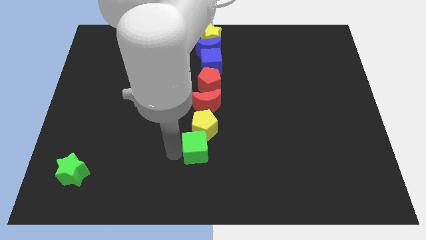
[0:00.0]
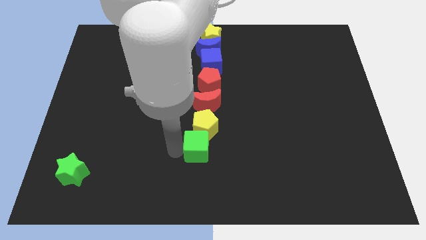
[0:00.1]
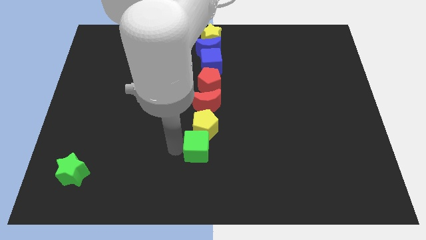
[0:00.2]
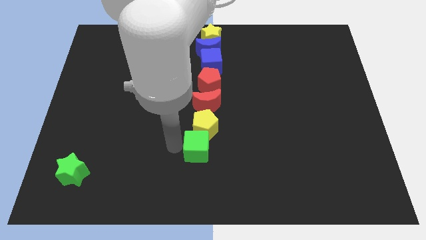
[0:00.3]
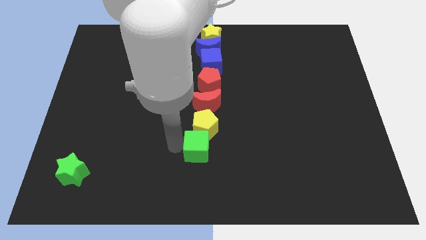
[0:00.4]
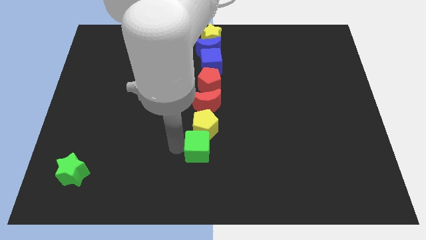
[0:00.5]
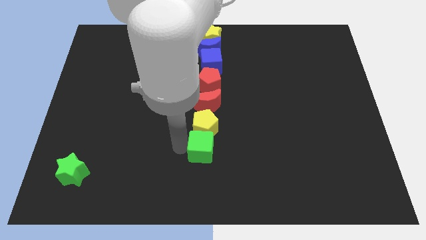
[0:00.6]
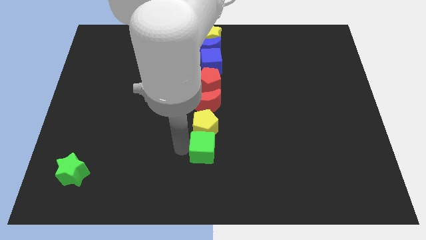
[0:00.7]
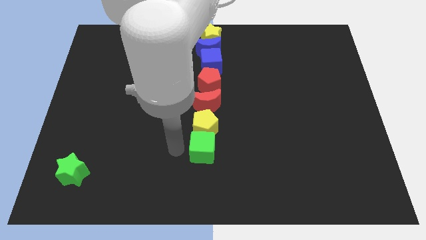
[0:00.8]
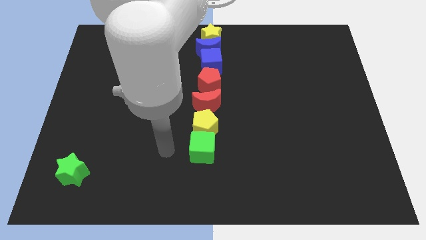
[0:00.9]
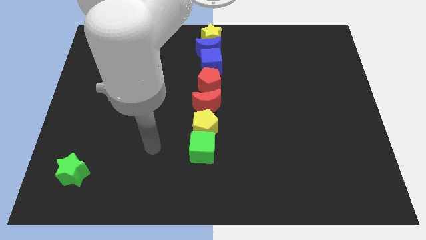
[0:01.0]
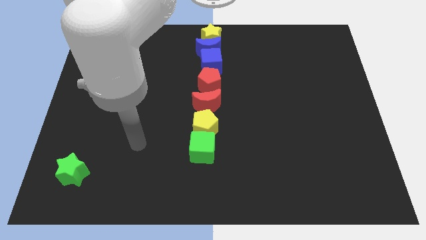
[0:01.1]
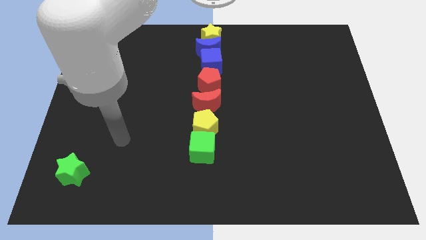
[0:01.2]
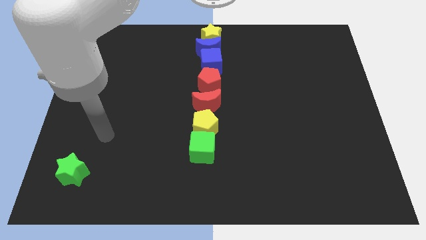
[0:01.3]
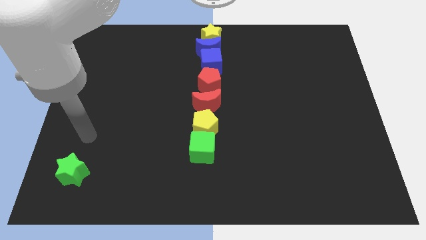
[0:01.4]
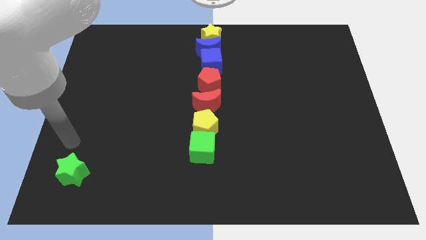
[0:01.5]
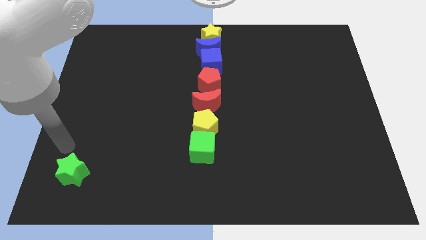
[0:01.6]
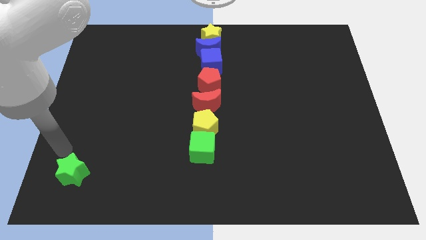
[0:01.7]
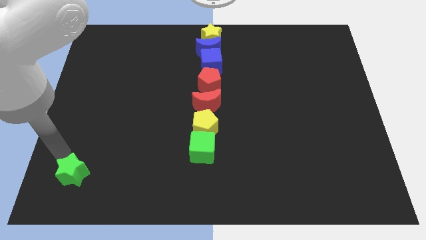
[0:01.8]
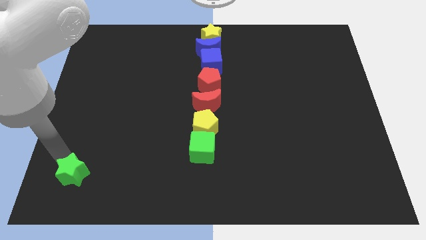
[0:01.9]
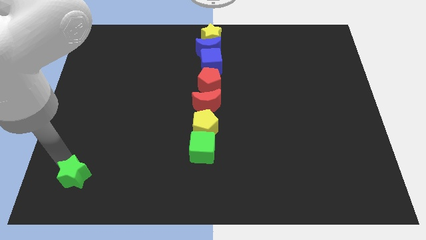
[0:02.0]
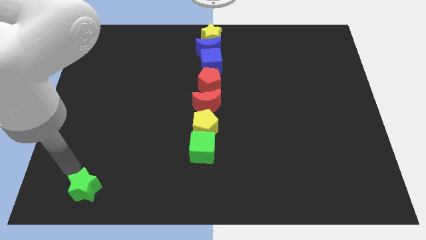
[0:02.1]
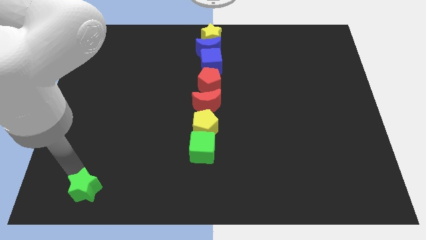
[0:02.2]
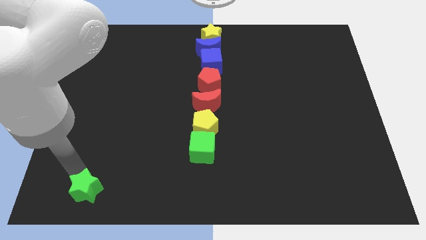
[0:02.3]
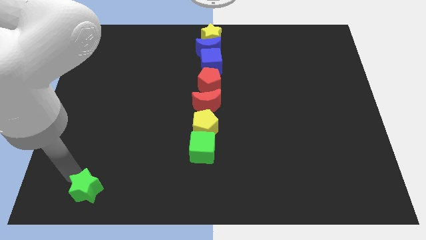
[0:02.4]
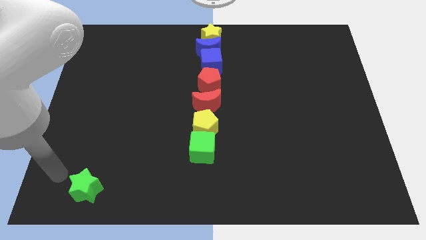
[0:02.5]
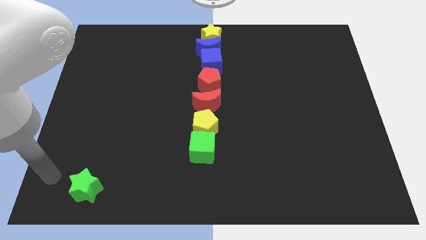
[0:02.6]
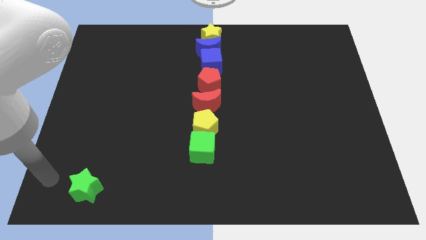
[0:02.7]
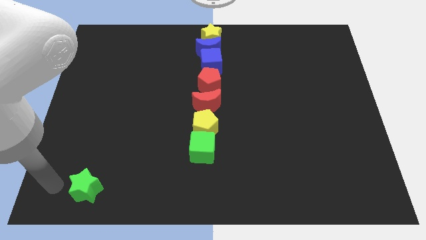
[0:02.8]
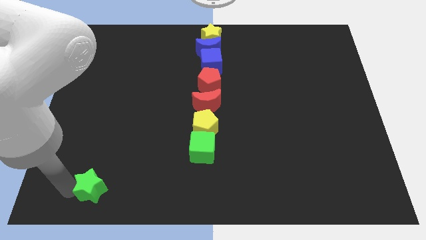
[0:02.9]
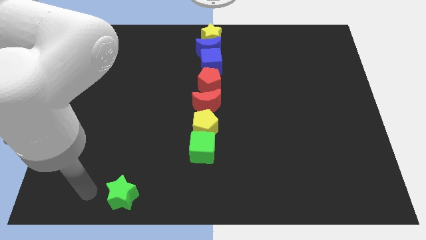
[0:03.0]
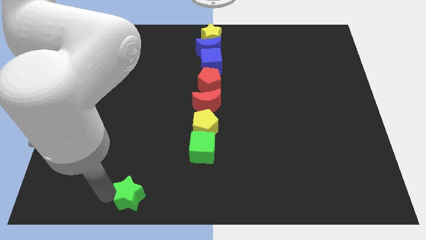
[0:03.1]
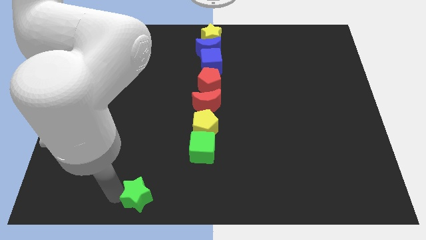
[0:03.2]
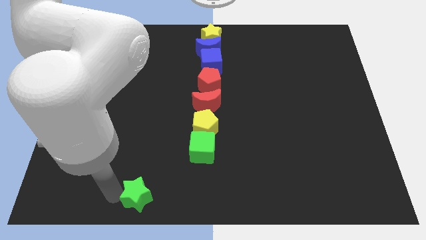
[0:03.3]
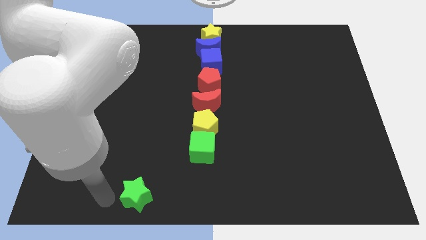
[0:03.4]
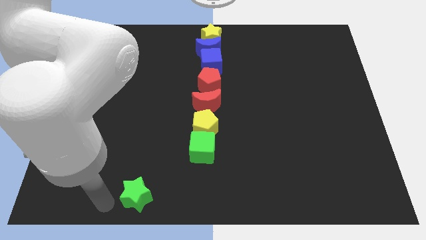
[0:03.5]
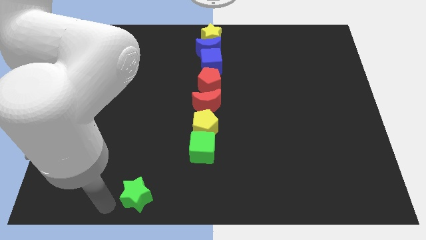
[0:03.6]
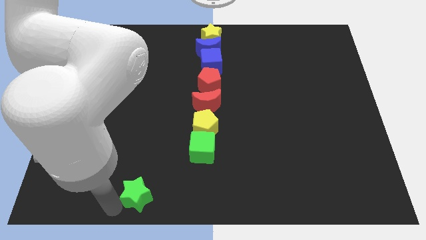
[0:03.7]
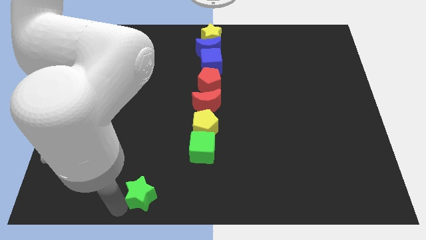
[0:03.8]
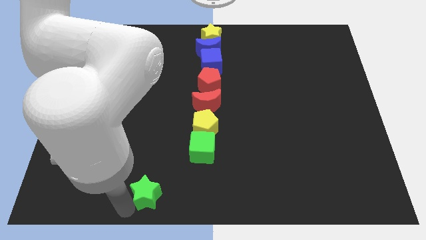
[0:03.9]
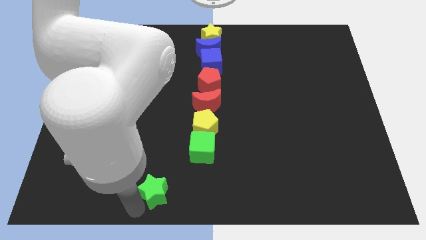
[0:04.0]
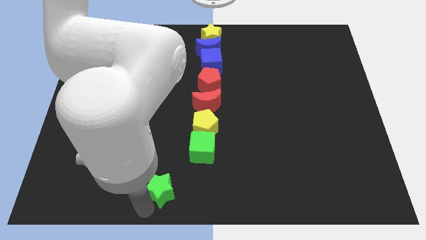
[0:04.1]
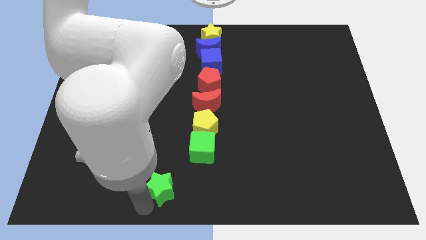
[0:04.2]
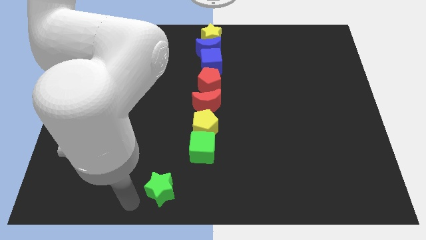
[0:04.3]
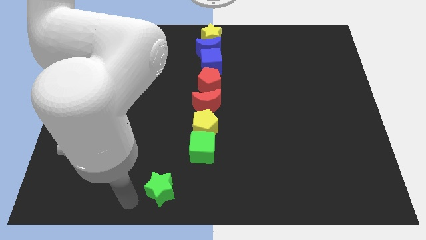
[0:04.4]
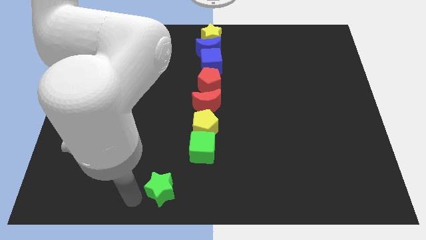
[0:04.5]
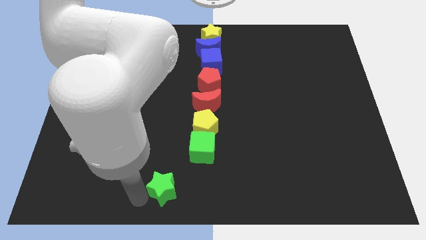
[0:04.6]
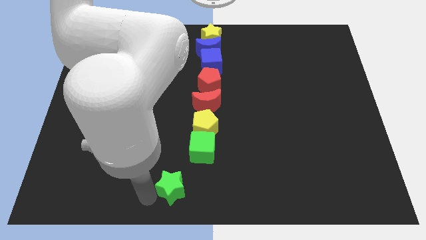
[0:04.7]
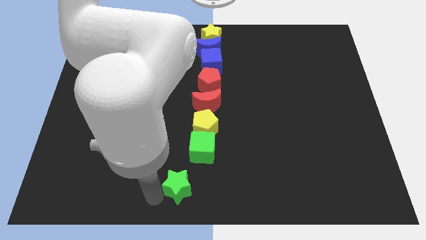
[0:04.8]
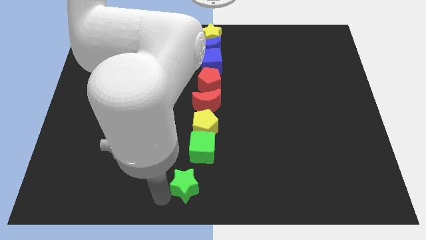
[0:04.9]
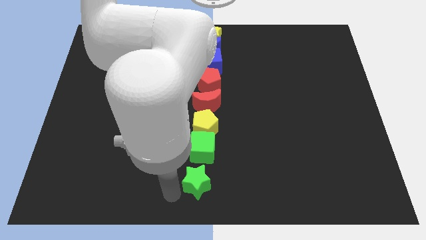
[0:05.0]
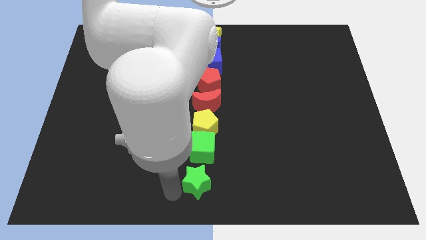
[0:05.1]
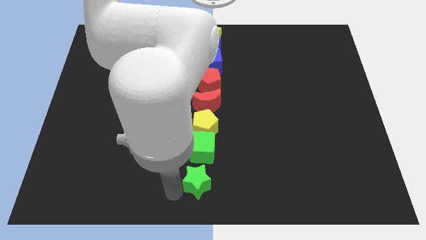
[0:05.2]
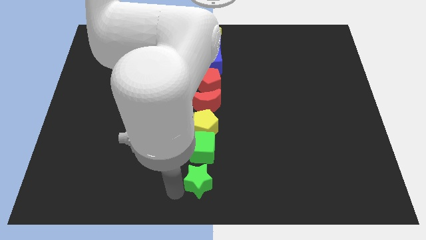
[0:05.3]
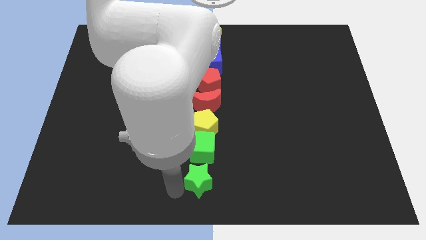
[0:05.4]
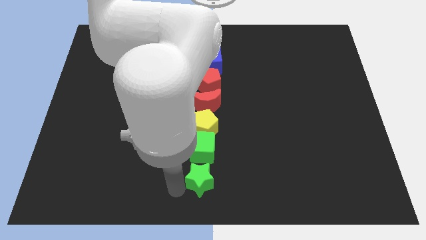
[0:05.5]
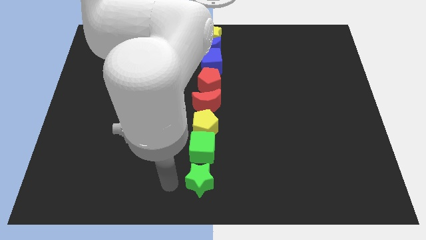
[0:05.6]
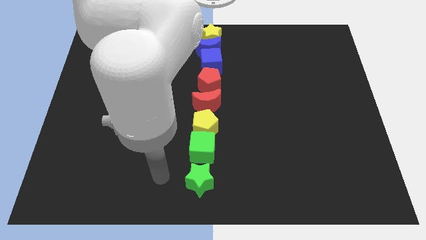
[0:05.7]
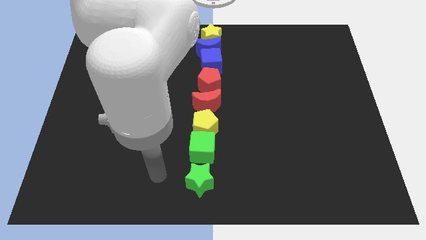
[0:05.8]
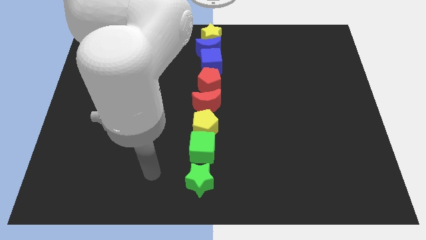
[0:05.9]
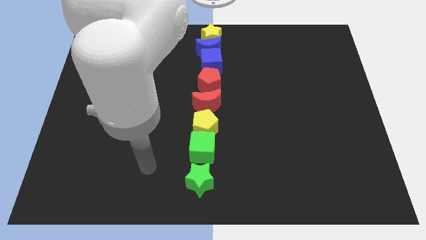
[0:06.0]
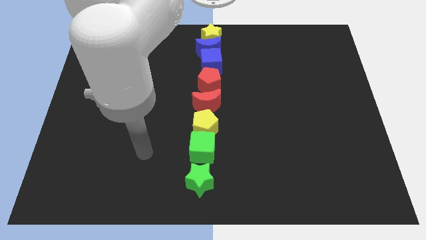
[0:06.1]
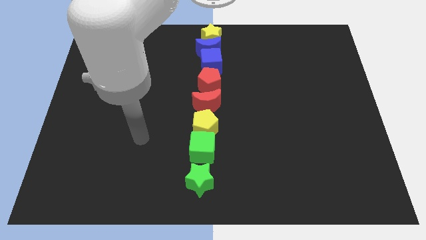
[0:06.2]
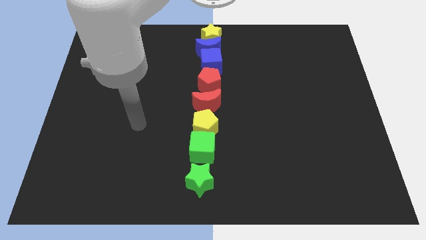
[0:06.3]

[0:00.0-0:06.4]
place the green star below the green cube

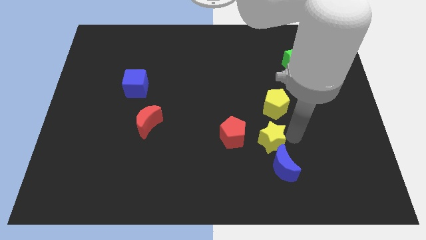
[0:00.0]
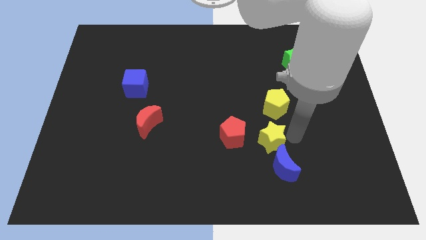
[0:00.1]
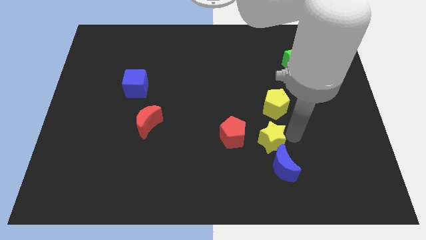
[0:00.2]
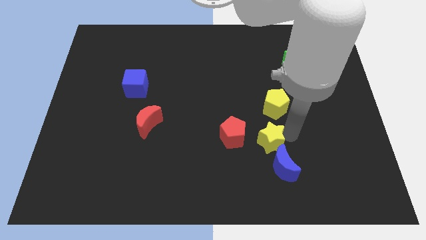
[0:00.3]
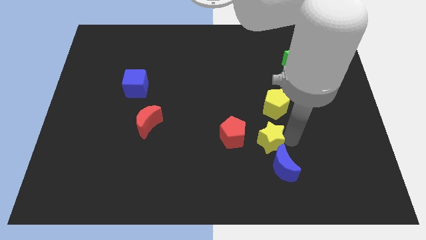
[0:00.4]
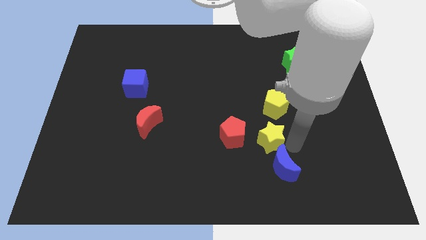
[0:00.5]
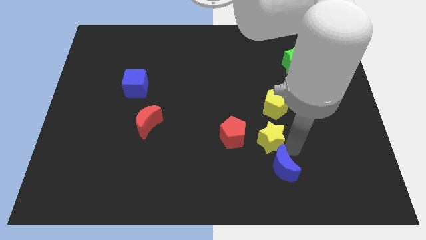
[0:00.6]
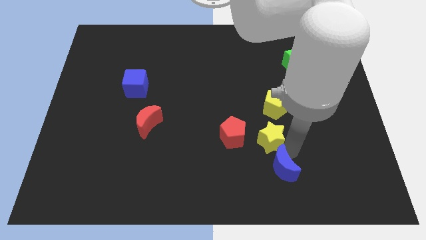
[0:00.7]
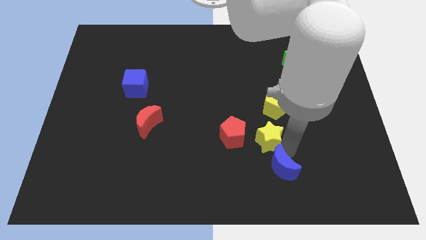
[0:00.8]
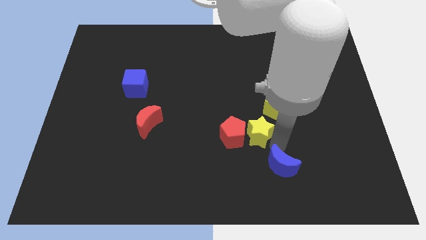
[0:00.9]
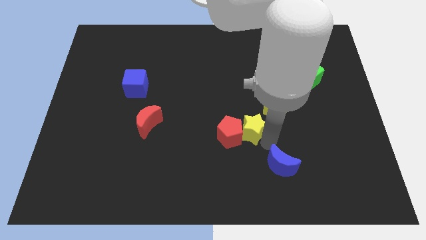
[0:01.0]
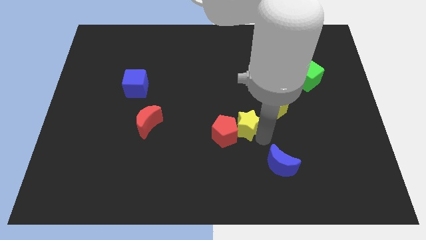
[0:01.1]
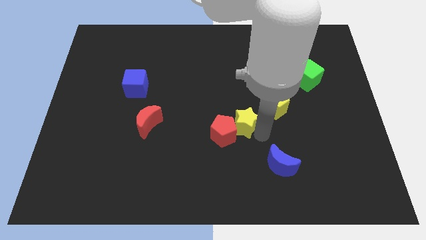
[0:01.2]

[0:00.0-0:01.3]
move the yellow star to the top right side of the red pentagon

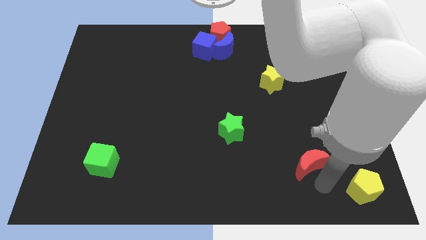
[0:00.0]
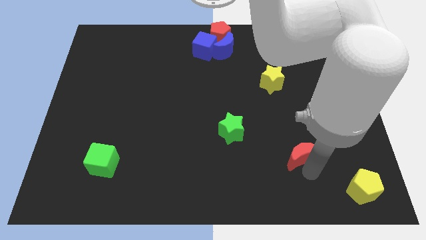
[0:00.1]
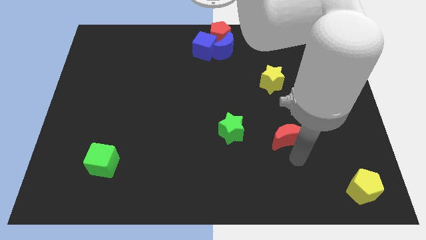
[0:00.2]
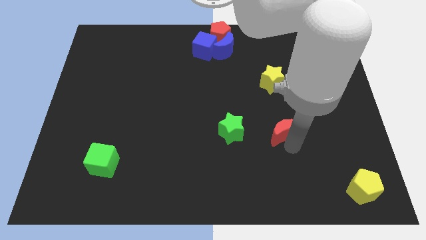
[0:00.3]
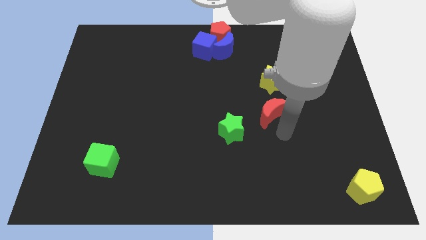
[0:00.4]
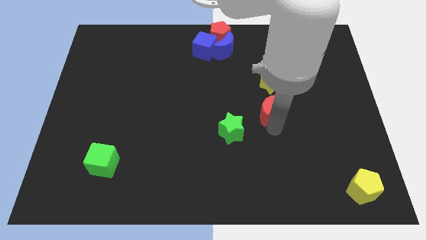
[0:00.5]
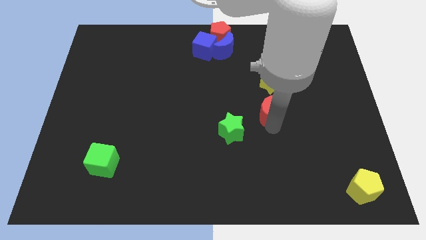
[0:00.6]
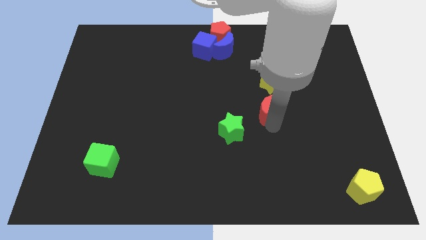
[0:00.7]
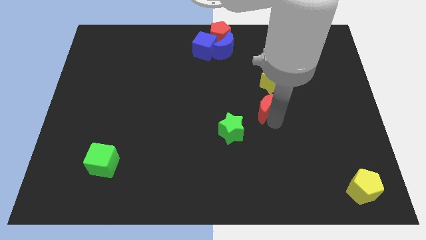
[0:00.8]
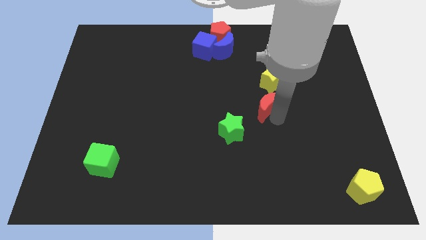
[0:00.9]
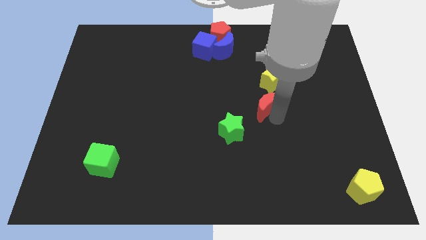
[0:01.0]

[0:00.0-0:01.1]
place red moon below yellow star
